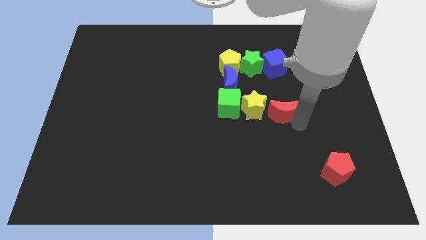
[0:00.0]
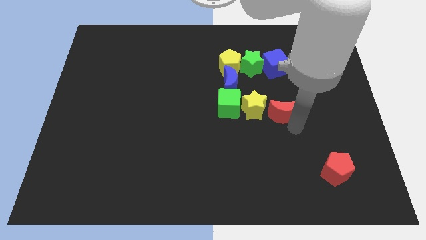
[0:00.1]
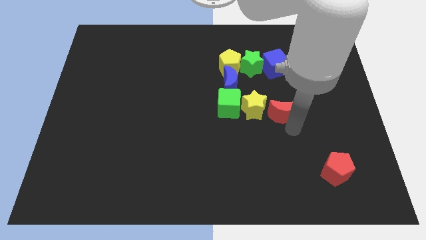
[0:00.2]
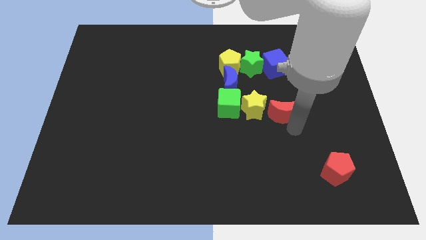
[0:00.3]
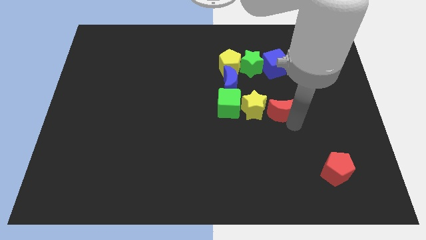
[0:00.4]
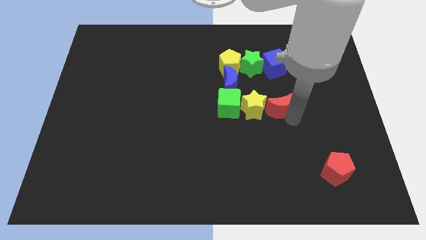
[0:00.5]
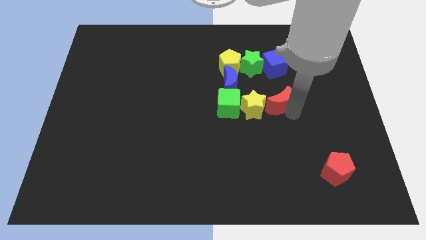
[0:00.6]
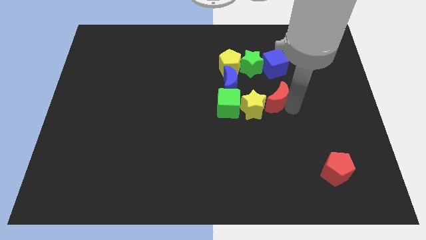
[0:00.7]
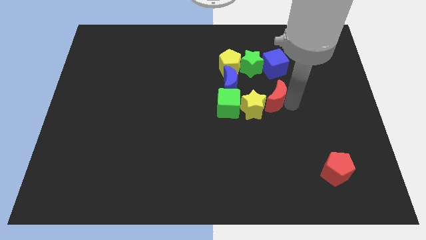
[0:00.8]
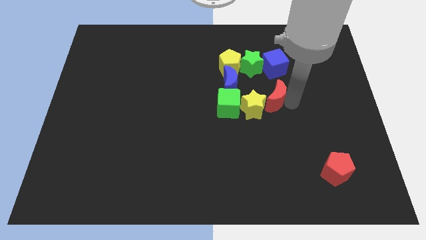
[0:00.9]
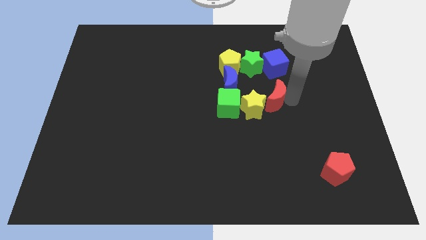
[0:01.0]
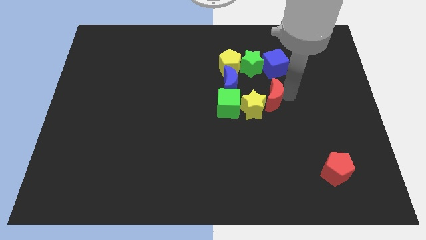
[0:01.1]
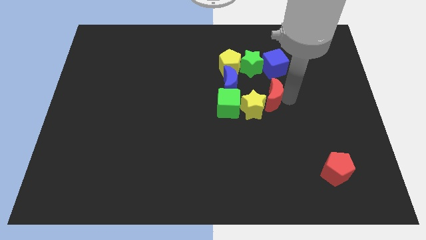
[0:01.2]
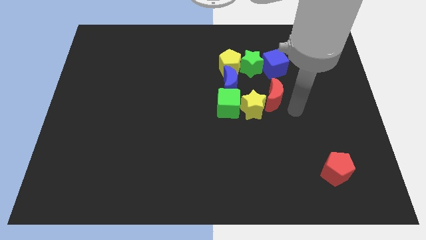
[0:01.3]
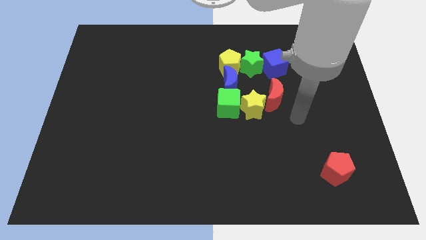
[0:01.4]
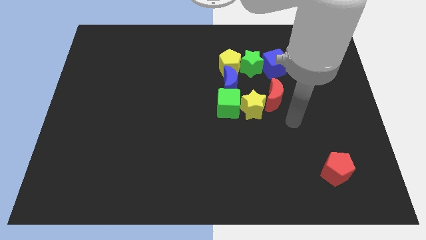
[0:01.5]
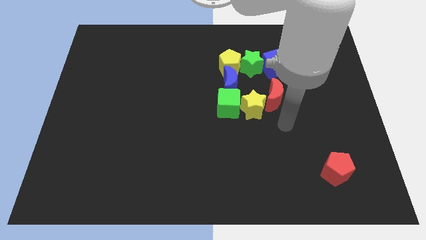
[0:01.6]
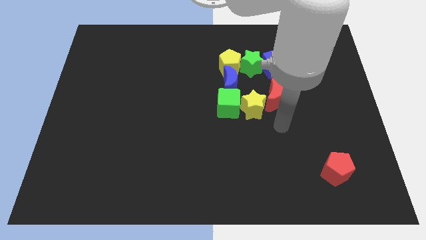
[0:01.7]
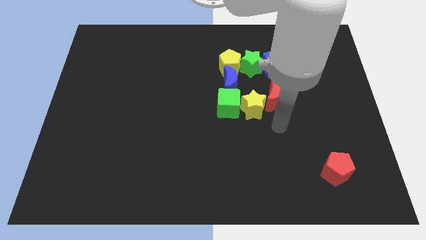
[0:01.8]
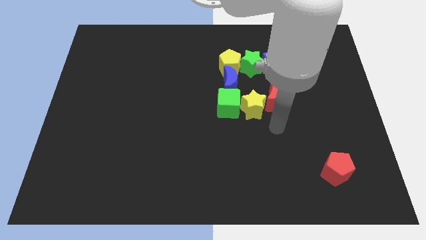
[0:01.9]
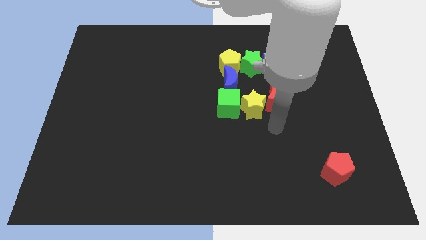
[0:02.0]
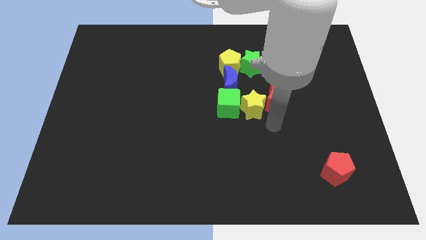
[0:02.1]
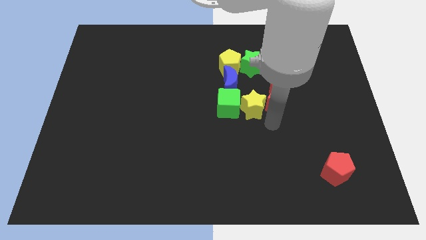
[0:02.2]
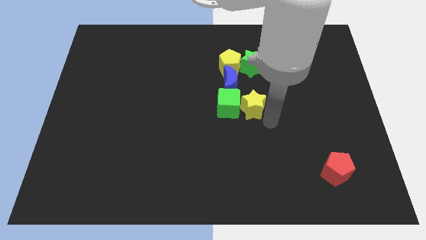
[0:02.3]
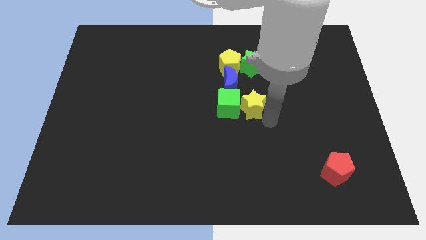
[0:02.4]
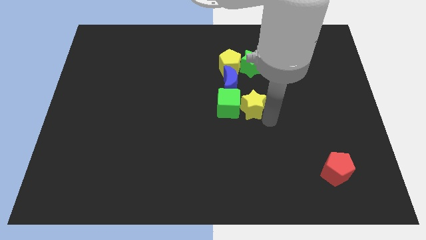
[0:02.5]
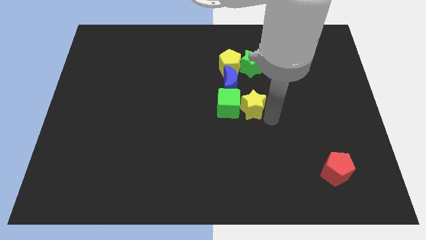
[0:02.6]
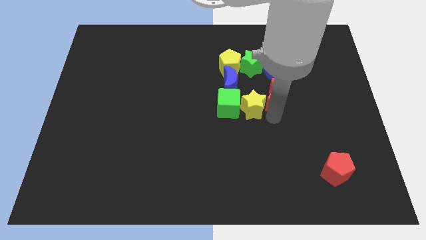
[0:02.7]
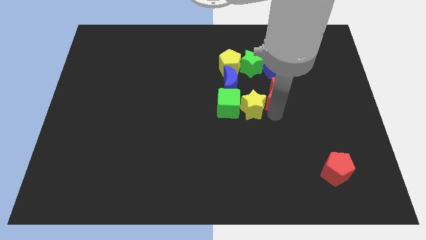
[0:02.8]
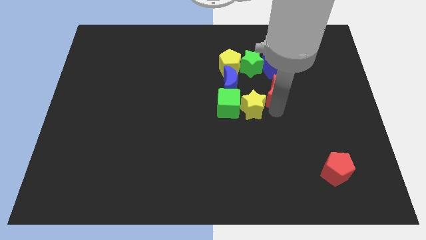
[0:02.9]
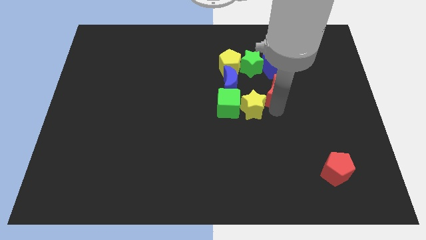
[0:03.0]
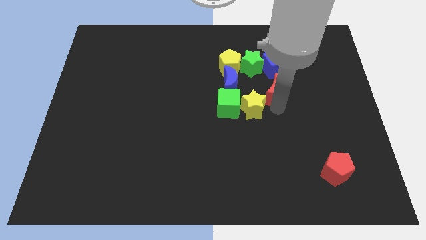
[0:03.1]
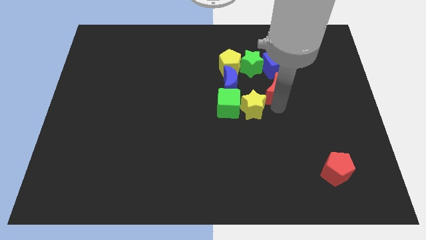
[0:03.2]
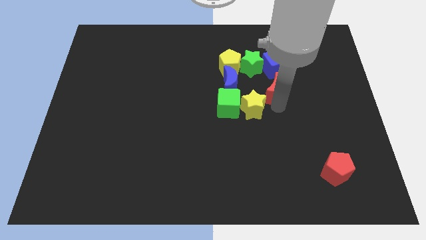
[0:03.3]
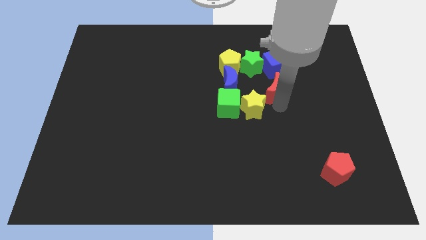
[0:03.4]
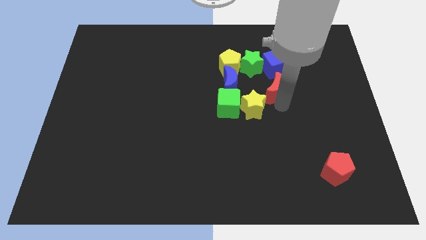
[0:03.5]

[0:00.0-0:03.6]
move the red crescent to the top right to the yellow star

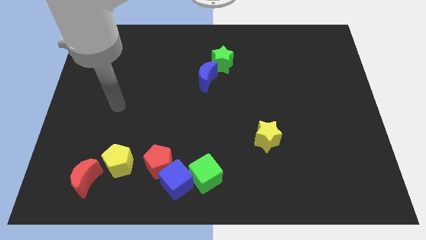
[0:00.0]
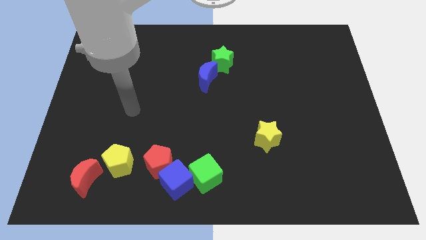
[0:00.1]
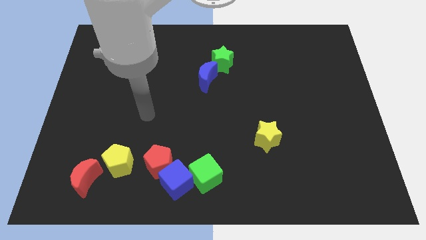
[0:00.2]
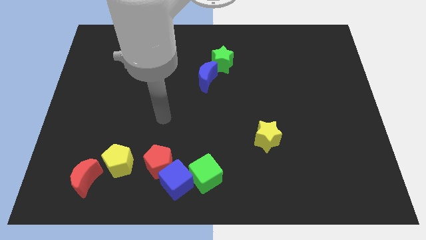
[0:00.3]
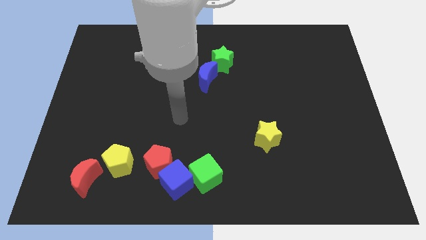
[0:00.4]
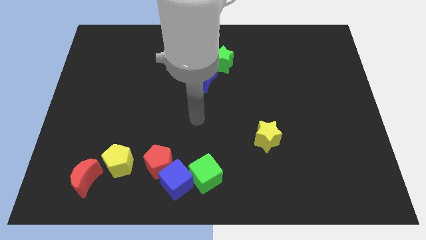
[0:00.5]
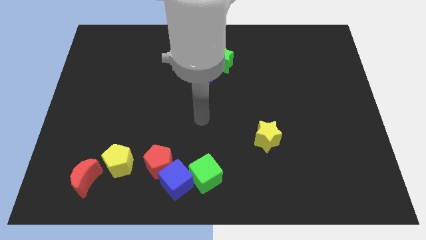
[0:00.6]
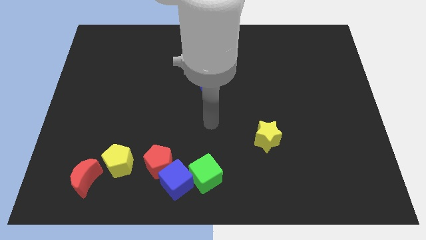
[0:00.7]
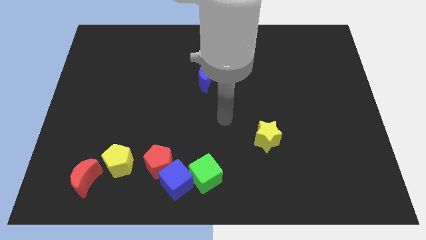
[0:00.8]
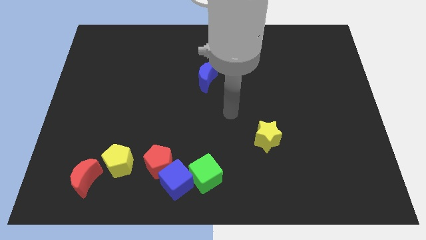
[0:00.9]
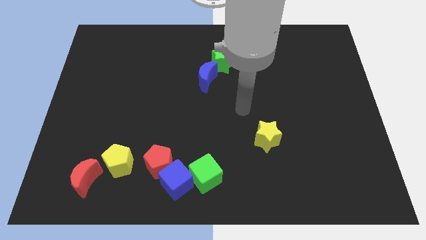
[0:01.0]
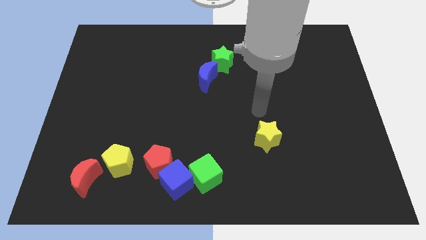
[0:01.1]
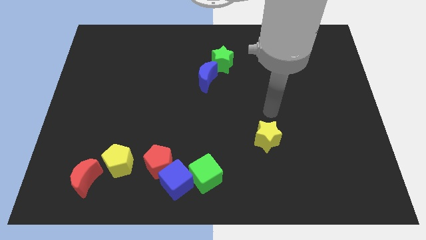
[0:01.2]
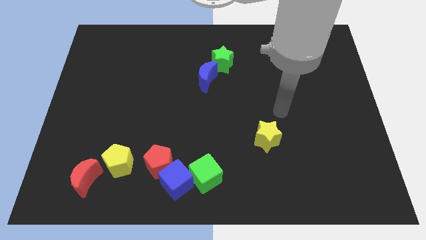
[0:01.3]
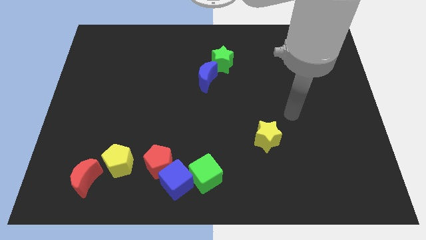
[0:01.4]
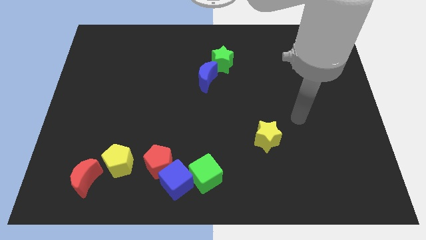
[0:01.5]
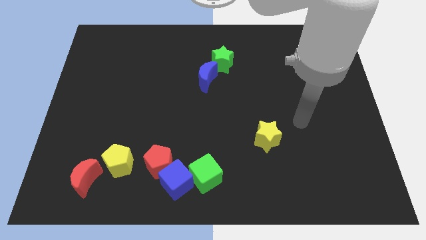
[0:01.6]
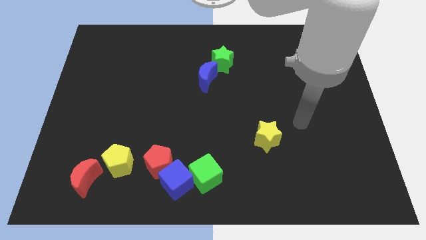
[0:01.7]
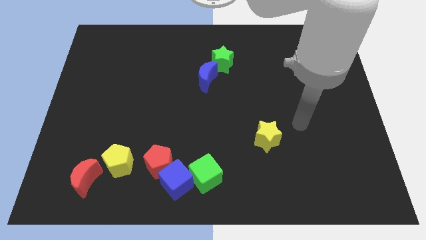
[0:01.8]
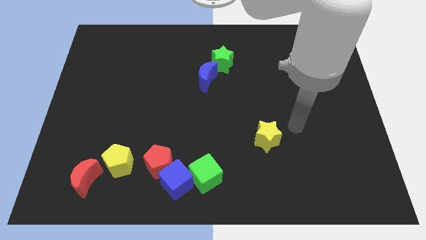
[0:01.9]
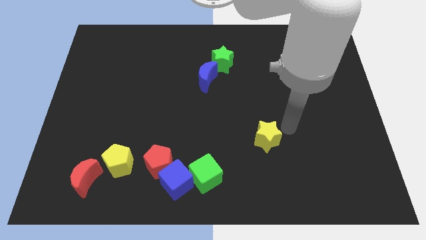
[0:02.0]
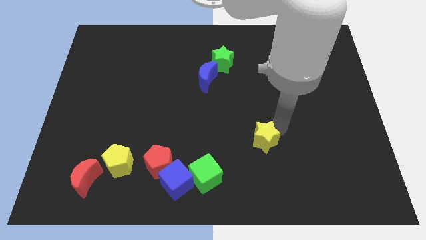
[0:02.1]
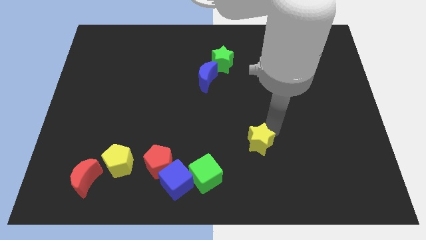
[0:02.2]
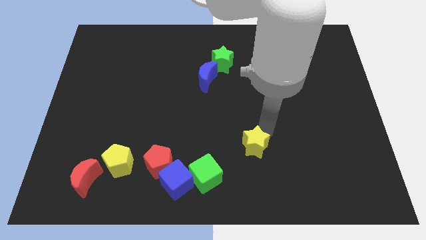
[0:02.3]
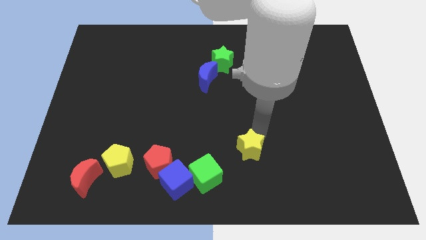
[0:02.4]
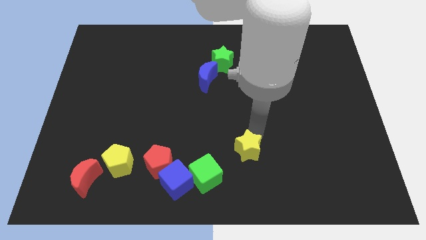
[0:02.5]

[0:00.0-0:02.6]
push the yellow star slightly downwards

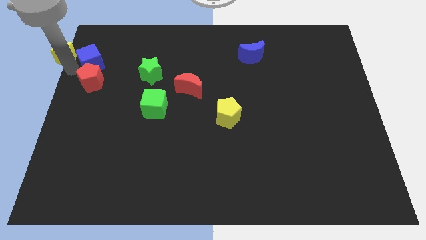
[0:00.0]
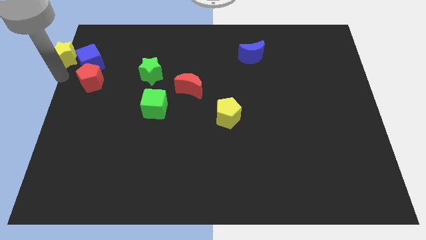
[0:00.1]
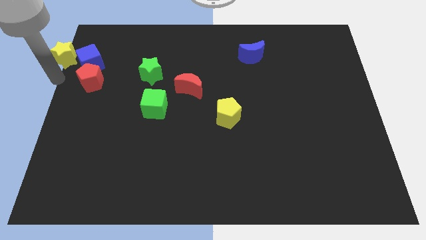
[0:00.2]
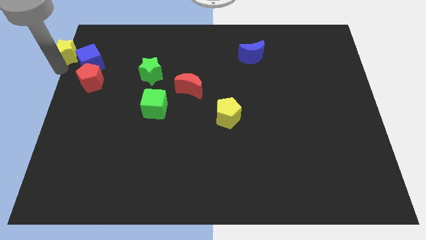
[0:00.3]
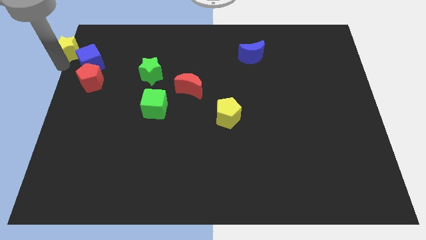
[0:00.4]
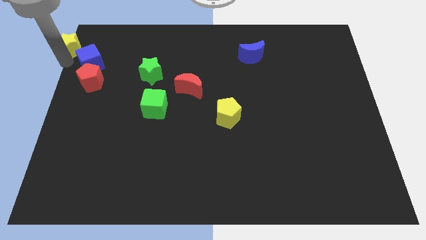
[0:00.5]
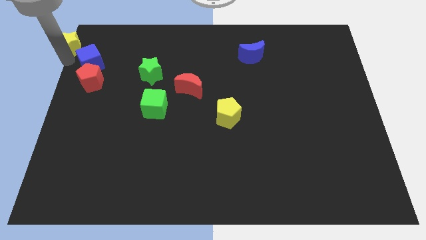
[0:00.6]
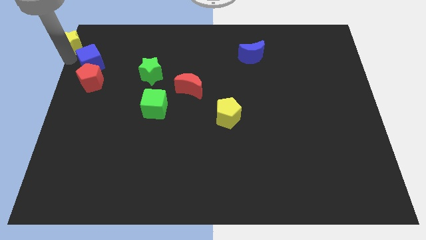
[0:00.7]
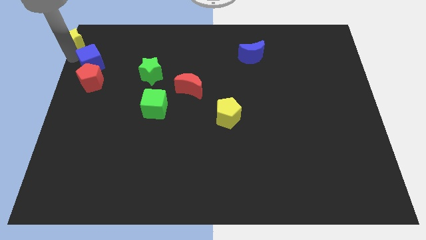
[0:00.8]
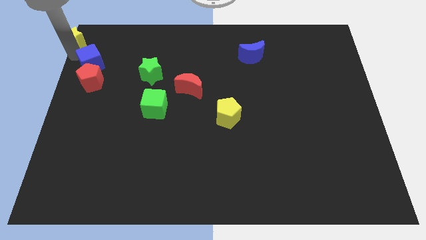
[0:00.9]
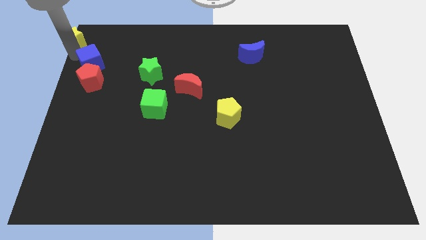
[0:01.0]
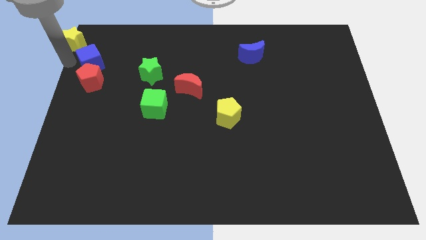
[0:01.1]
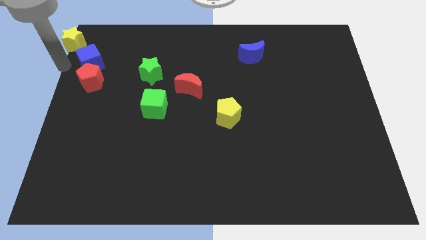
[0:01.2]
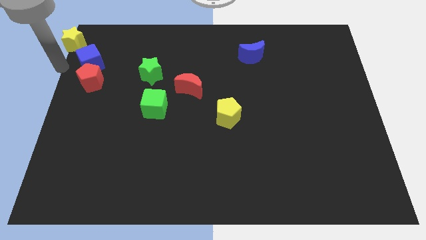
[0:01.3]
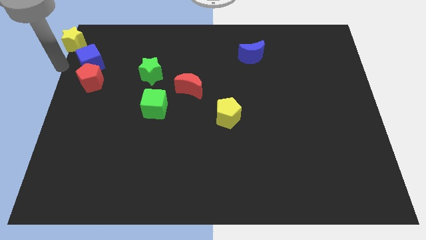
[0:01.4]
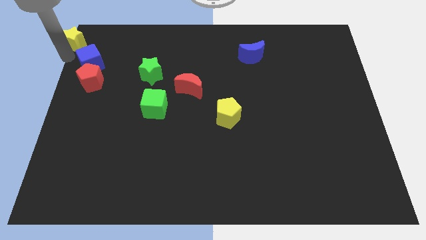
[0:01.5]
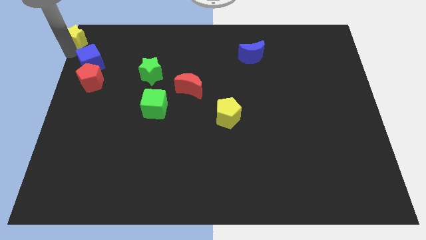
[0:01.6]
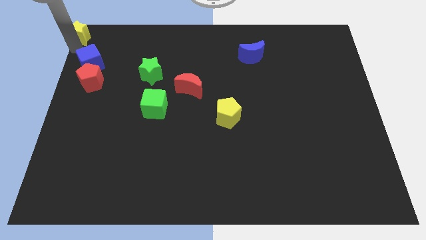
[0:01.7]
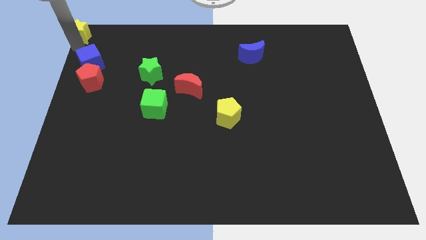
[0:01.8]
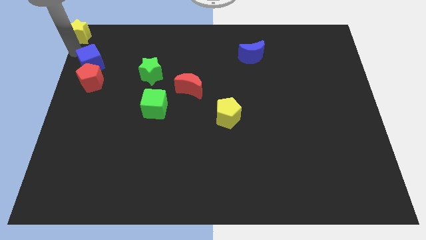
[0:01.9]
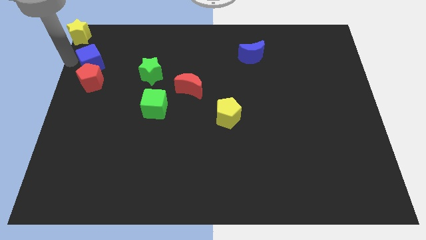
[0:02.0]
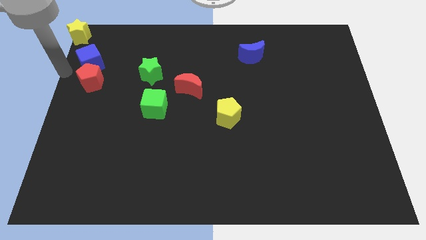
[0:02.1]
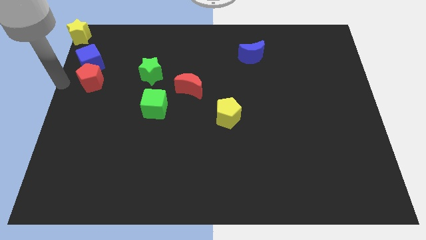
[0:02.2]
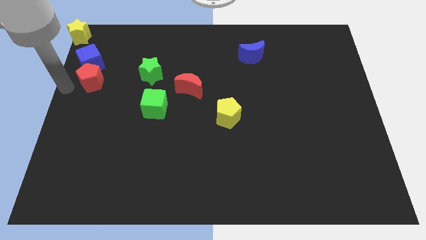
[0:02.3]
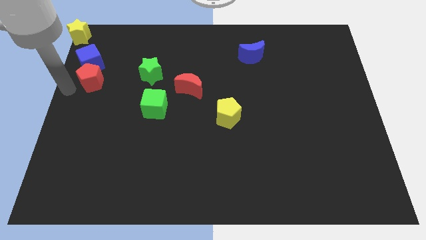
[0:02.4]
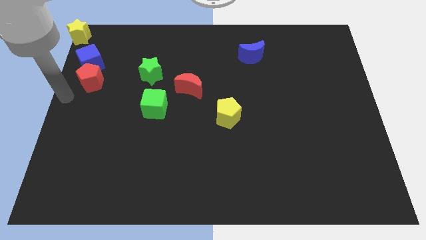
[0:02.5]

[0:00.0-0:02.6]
separate the yellow star to top left corner

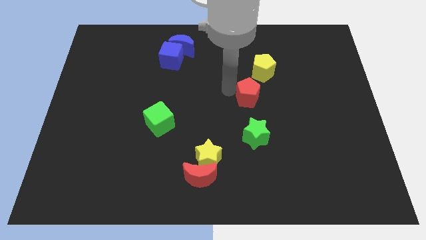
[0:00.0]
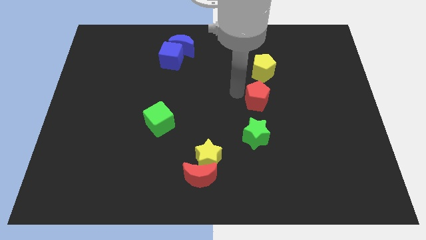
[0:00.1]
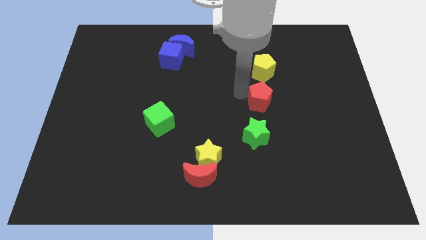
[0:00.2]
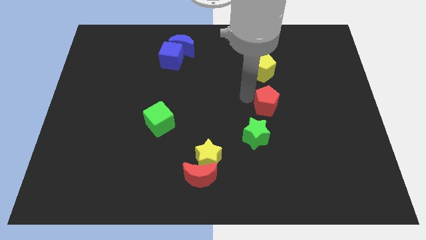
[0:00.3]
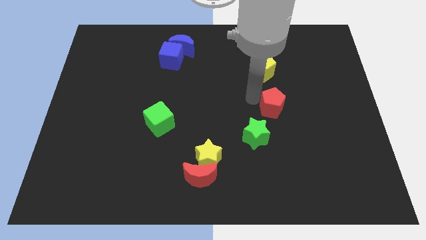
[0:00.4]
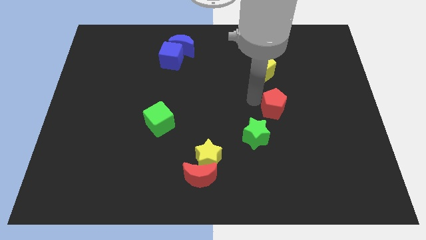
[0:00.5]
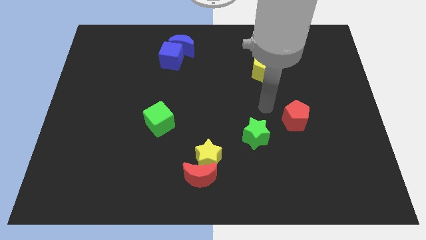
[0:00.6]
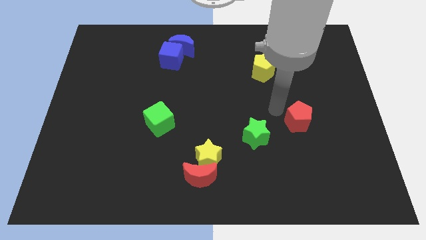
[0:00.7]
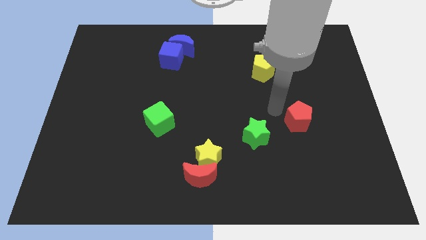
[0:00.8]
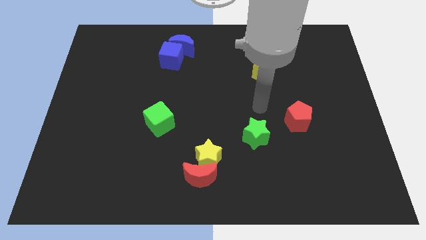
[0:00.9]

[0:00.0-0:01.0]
slide the red pentagon diagonally top right to the green star
